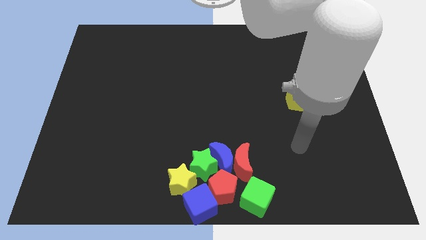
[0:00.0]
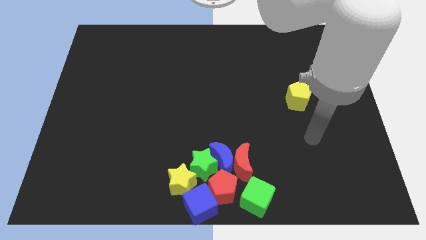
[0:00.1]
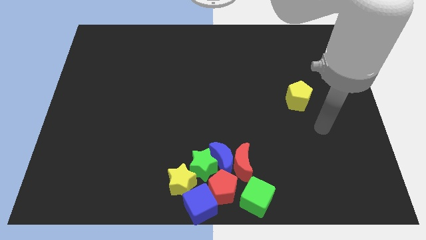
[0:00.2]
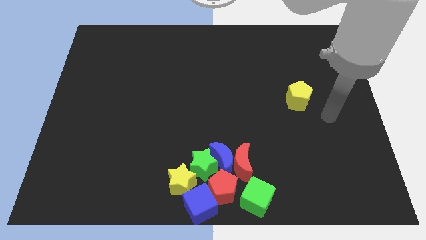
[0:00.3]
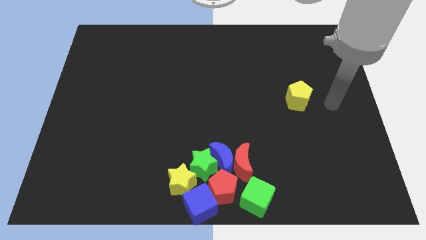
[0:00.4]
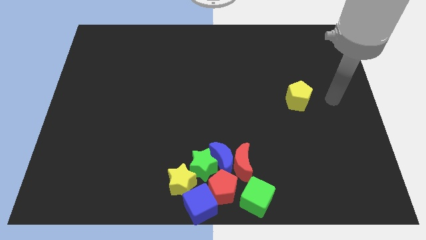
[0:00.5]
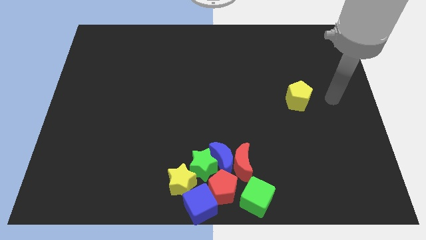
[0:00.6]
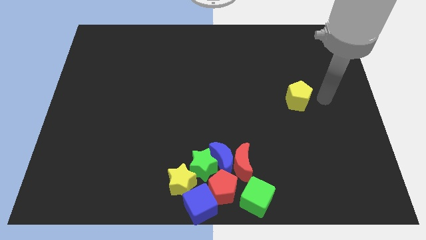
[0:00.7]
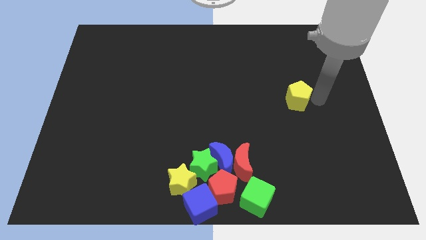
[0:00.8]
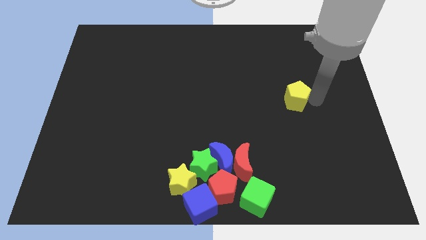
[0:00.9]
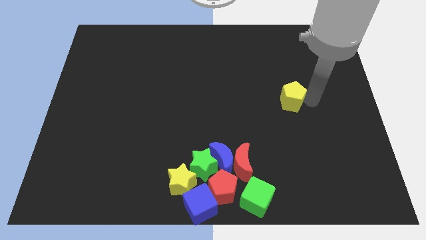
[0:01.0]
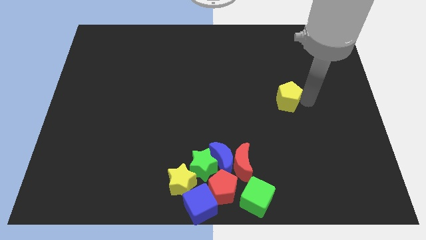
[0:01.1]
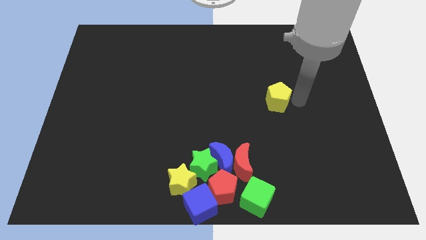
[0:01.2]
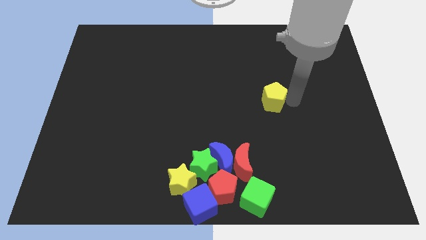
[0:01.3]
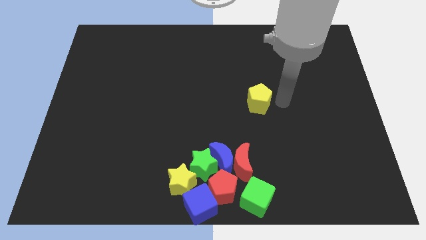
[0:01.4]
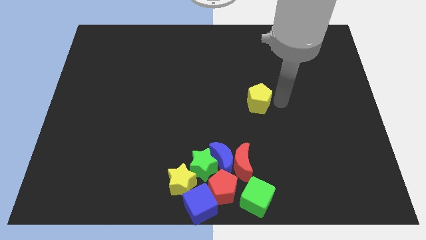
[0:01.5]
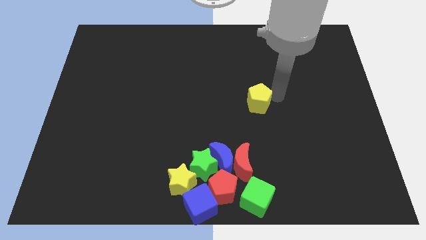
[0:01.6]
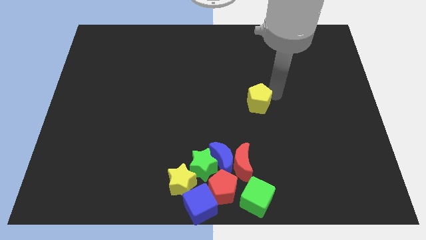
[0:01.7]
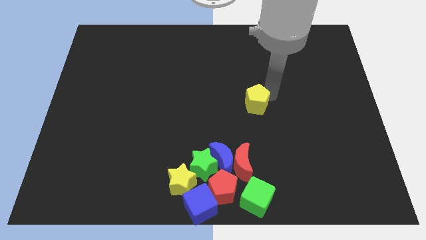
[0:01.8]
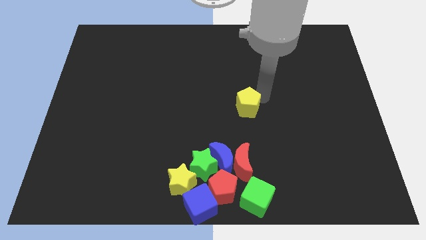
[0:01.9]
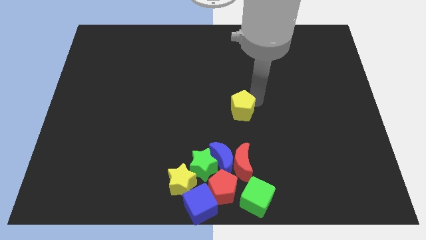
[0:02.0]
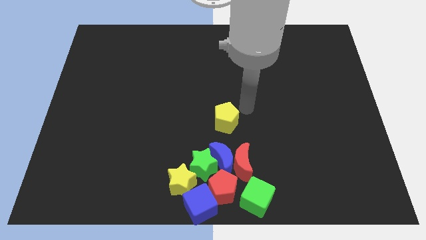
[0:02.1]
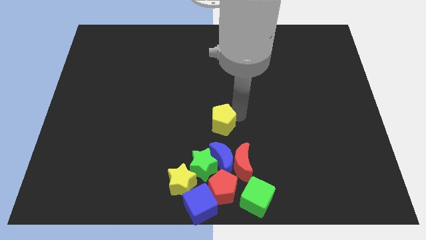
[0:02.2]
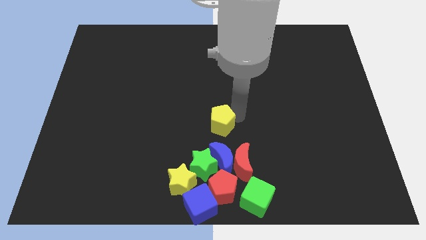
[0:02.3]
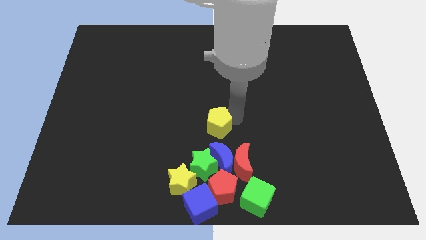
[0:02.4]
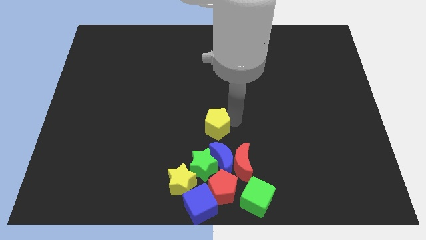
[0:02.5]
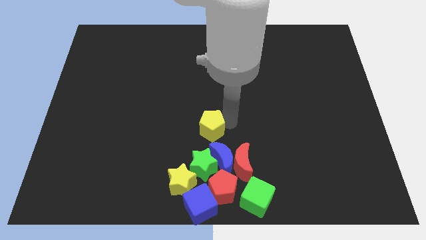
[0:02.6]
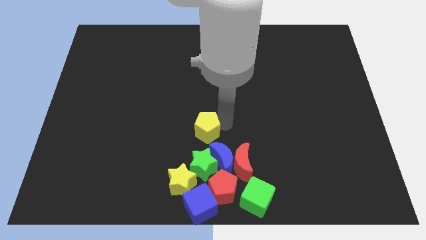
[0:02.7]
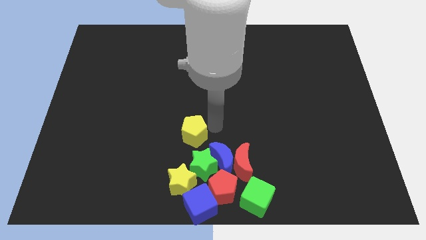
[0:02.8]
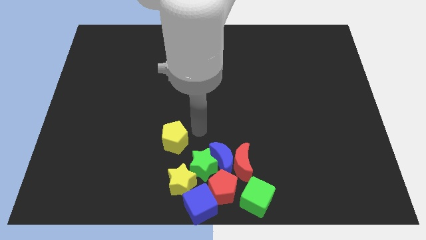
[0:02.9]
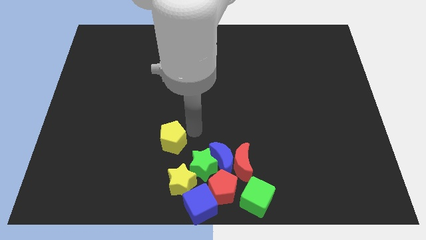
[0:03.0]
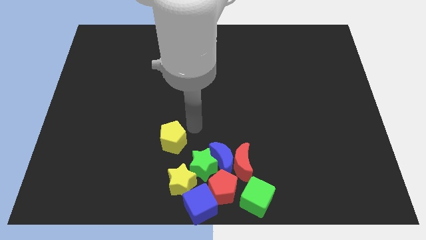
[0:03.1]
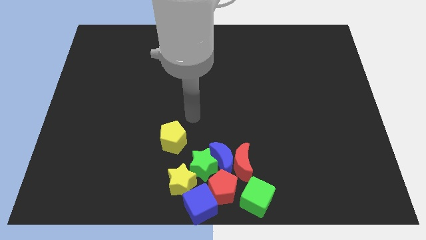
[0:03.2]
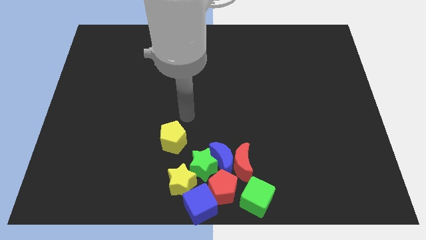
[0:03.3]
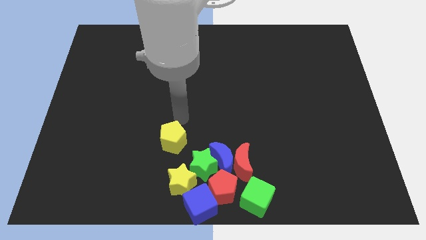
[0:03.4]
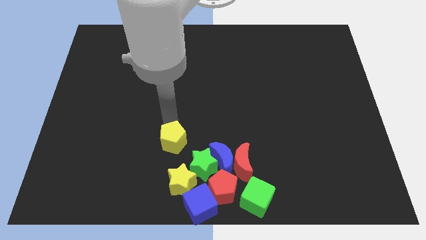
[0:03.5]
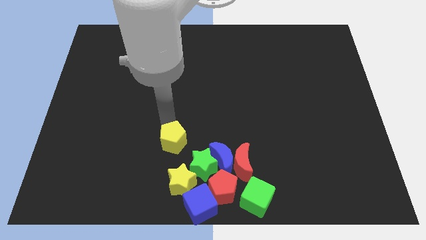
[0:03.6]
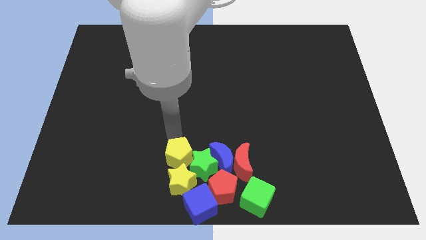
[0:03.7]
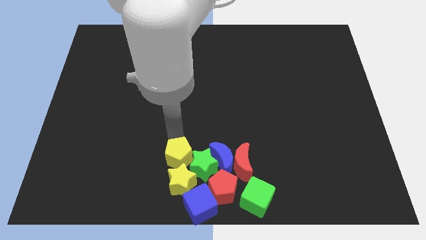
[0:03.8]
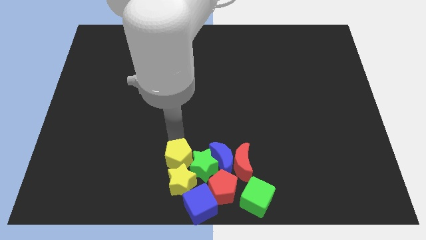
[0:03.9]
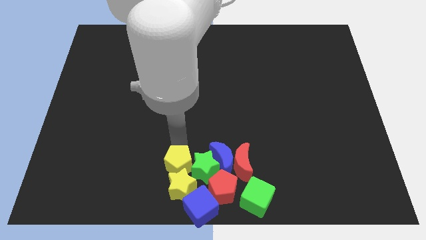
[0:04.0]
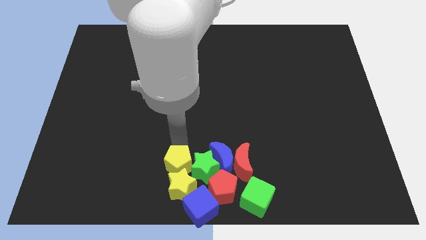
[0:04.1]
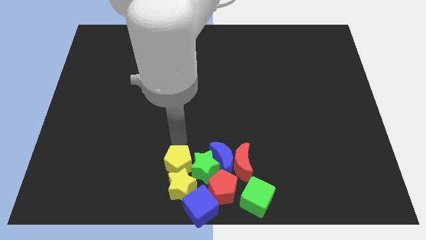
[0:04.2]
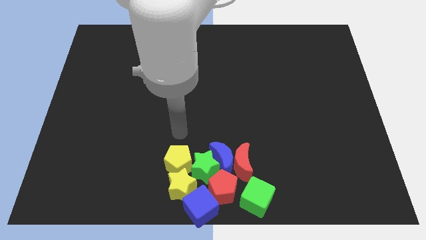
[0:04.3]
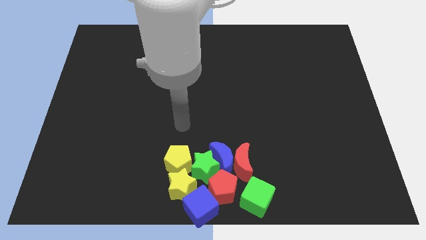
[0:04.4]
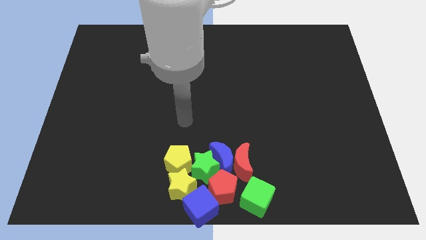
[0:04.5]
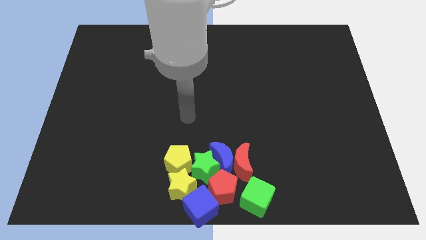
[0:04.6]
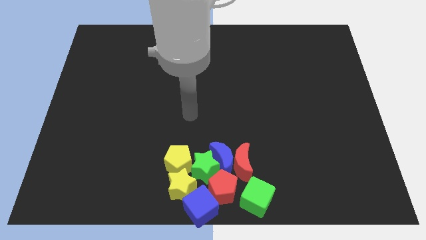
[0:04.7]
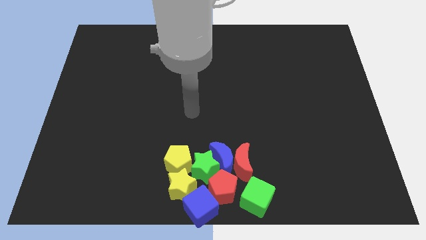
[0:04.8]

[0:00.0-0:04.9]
push the yellow pentagon into the yellow star

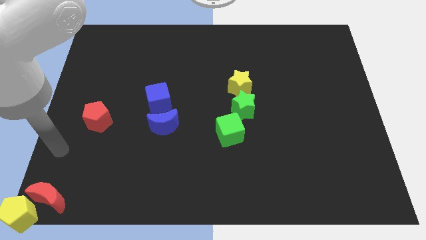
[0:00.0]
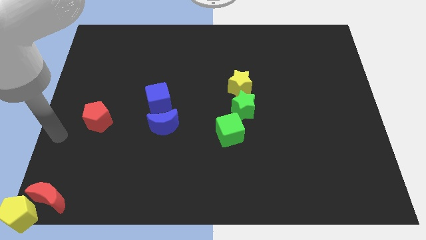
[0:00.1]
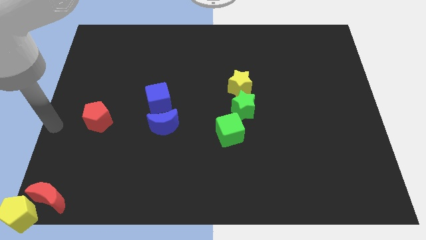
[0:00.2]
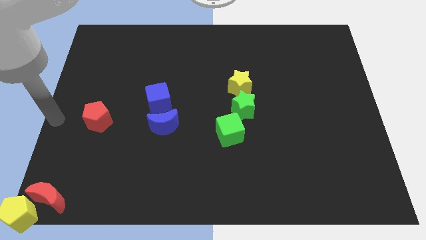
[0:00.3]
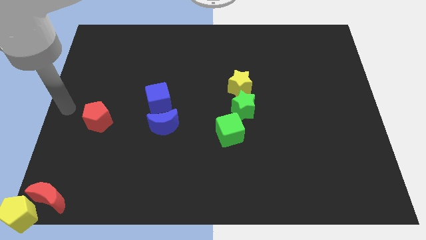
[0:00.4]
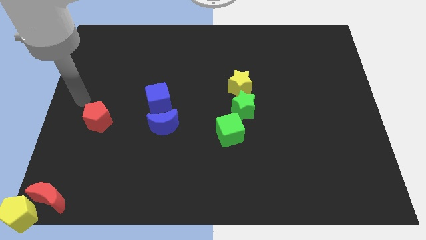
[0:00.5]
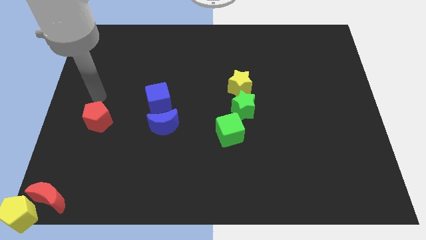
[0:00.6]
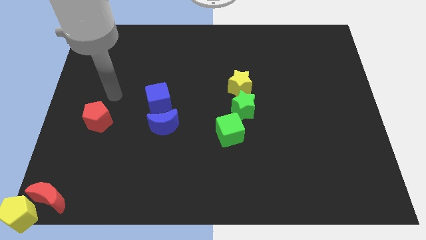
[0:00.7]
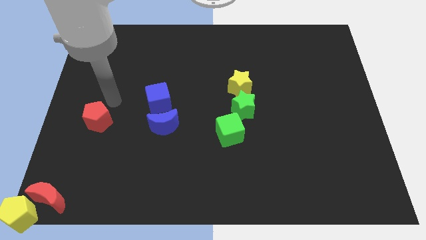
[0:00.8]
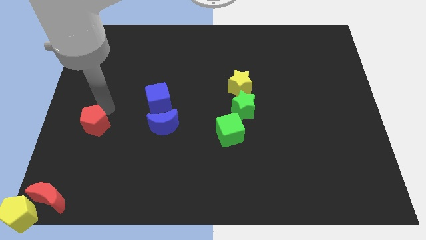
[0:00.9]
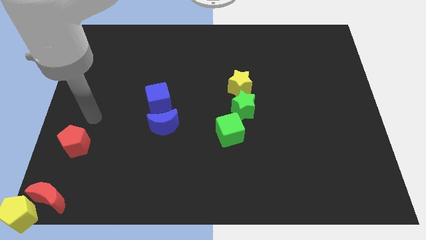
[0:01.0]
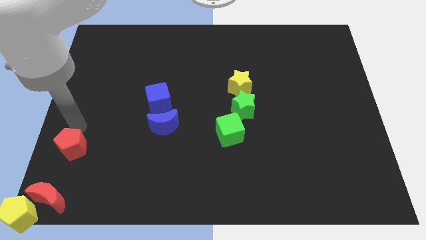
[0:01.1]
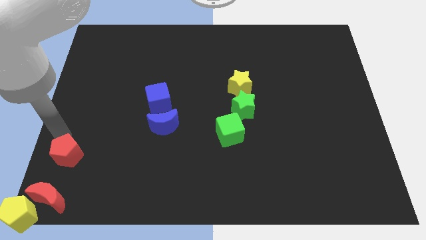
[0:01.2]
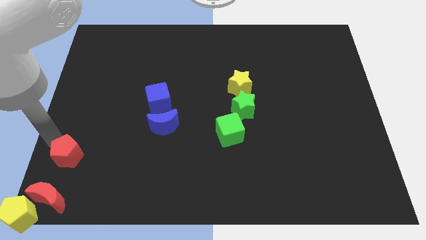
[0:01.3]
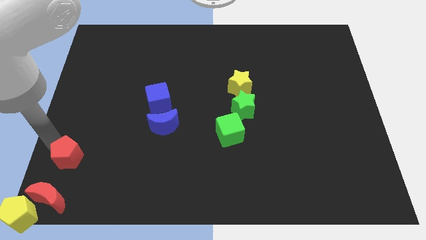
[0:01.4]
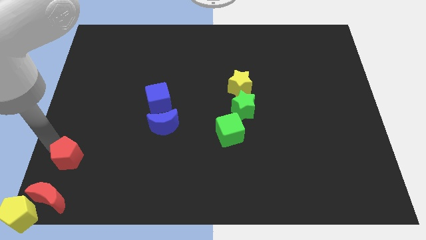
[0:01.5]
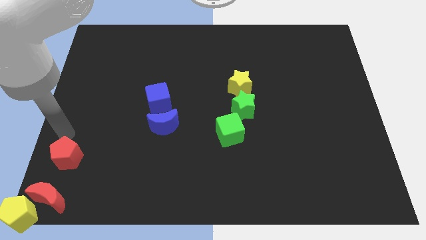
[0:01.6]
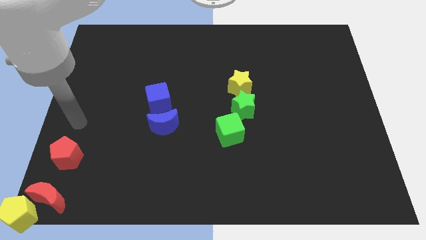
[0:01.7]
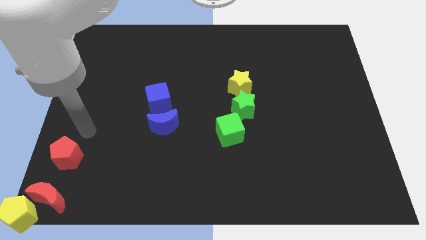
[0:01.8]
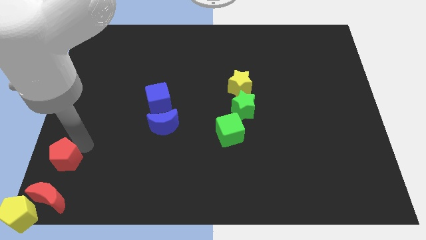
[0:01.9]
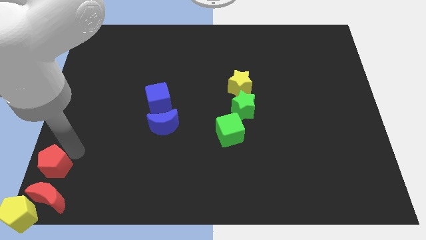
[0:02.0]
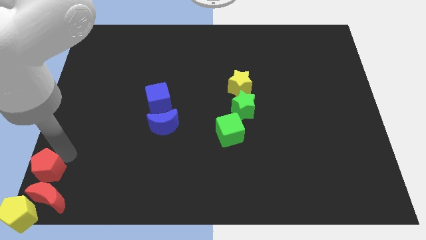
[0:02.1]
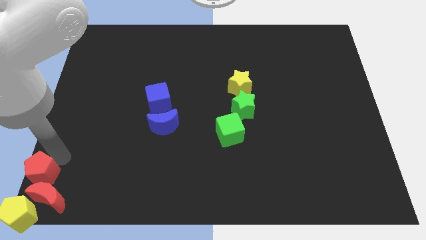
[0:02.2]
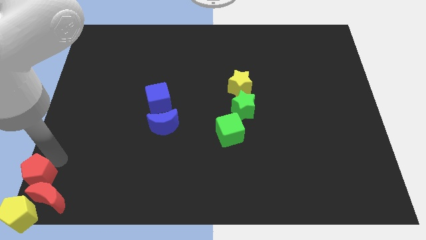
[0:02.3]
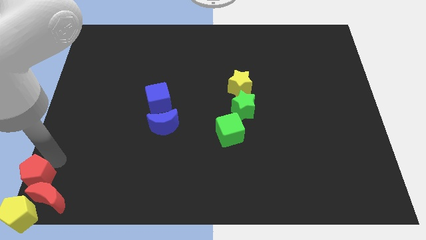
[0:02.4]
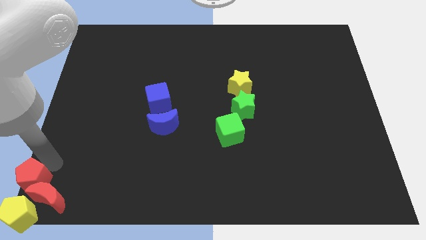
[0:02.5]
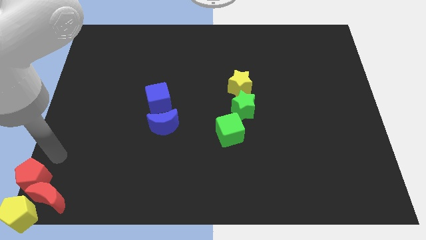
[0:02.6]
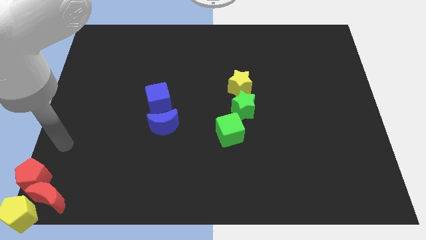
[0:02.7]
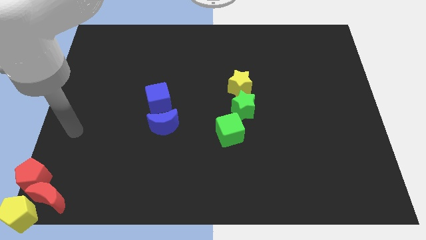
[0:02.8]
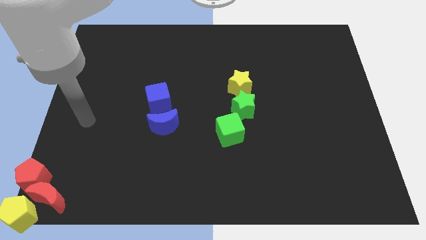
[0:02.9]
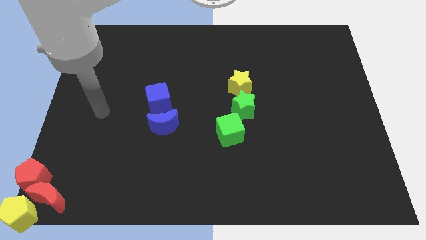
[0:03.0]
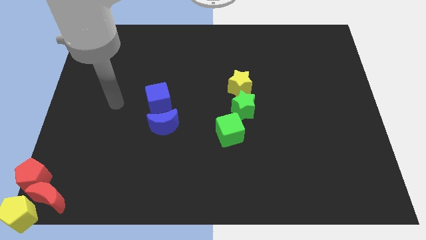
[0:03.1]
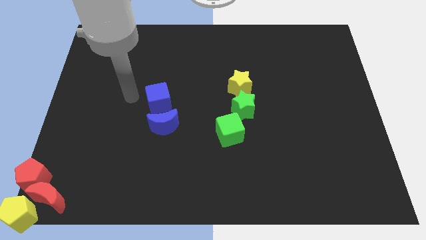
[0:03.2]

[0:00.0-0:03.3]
move the red pentagon to the bottom left corner

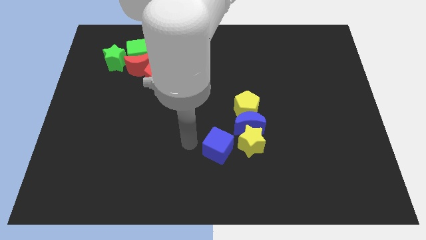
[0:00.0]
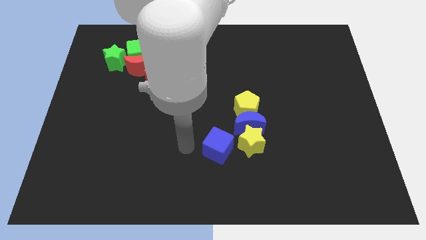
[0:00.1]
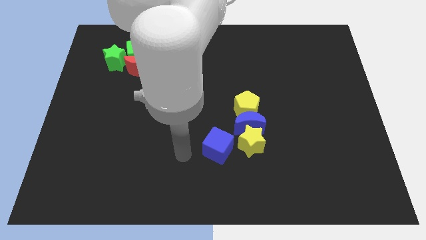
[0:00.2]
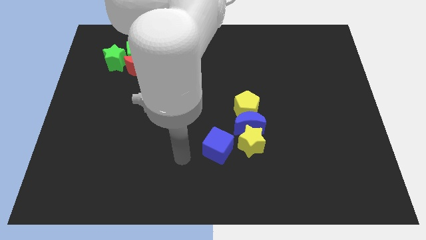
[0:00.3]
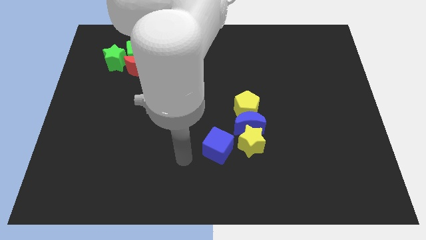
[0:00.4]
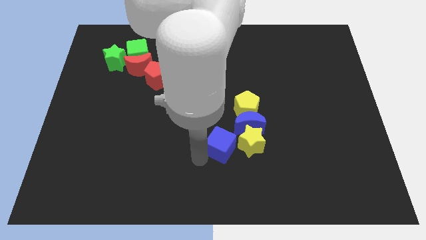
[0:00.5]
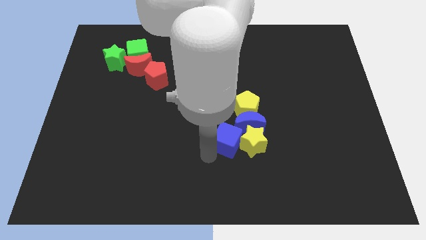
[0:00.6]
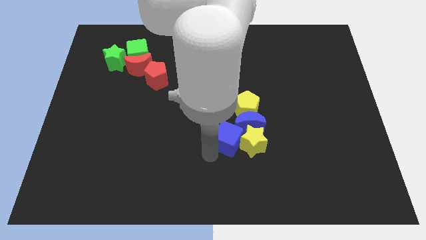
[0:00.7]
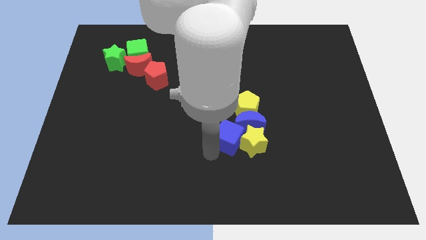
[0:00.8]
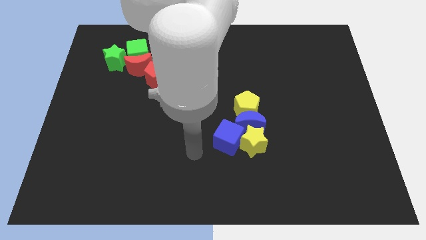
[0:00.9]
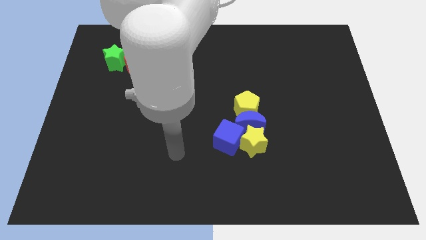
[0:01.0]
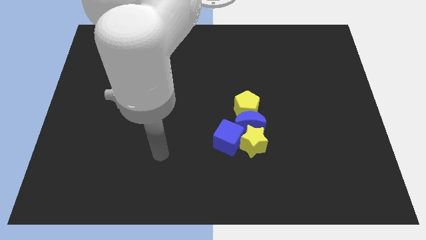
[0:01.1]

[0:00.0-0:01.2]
push blue cube into yellow star
